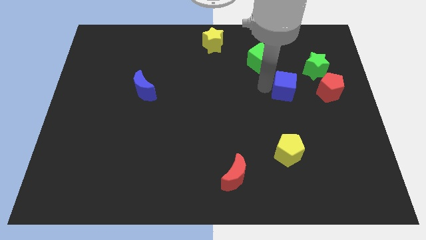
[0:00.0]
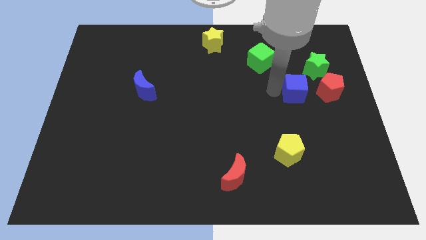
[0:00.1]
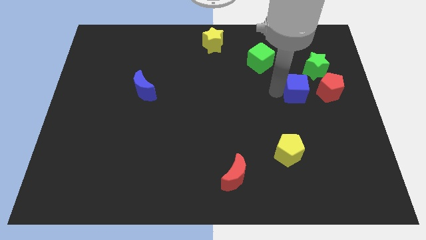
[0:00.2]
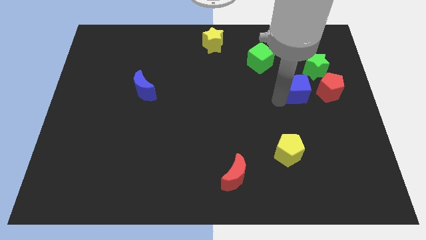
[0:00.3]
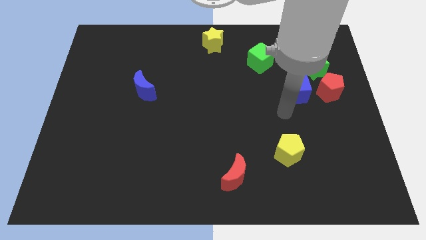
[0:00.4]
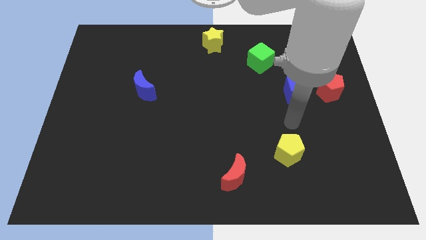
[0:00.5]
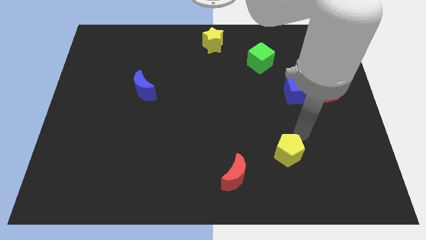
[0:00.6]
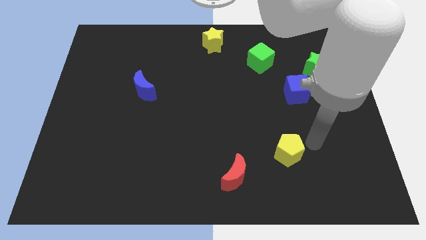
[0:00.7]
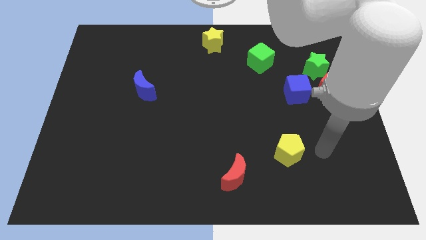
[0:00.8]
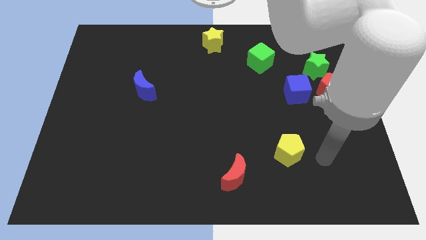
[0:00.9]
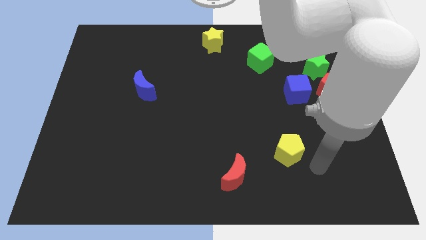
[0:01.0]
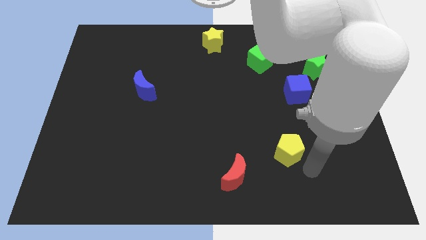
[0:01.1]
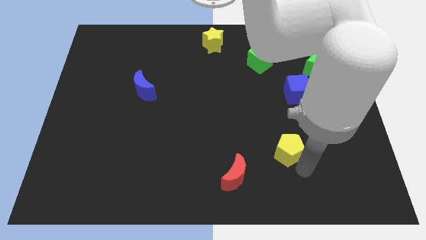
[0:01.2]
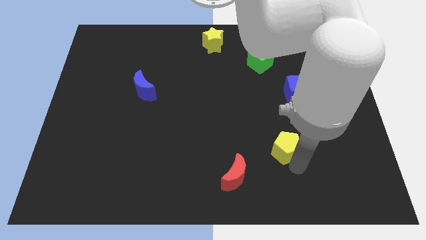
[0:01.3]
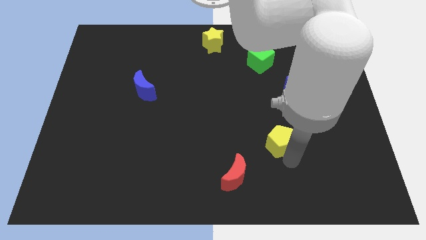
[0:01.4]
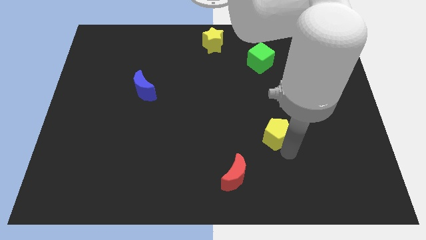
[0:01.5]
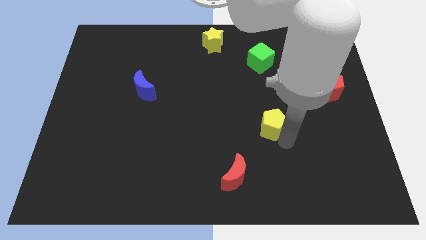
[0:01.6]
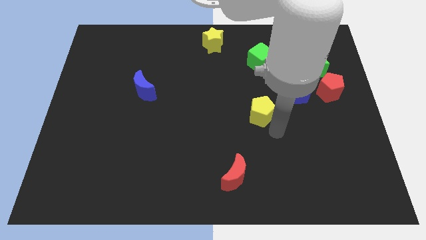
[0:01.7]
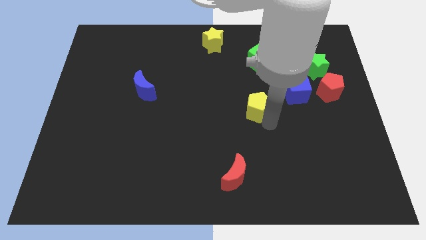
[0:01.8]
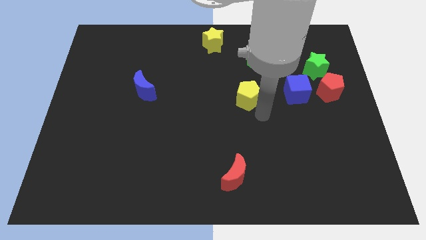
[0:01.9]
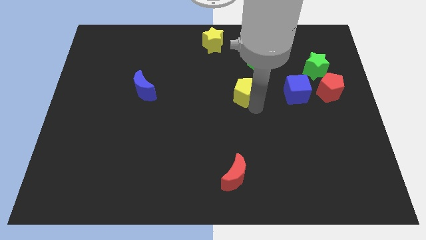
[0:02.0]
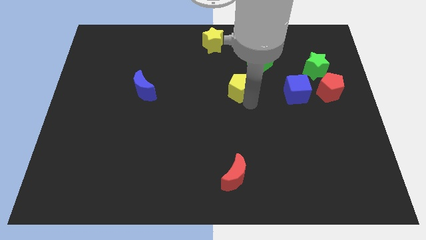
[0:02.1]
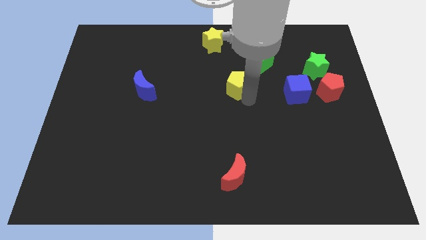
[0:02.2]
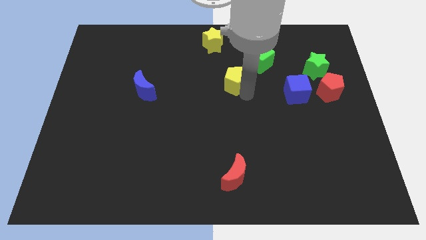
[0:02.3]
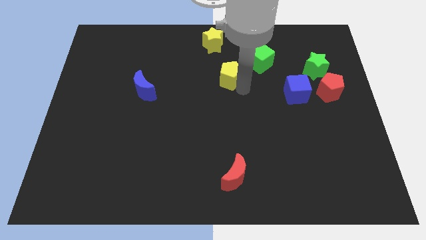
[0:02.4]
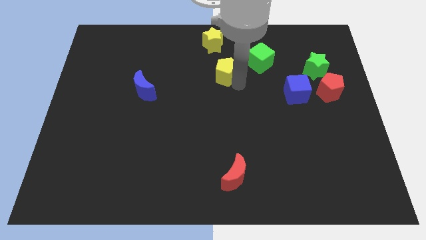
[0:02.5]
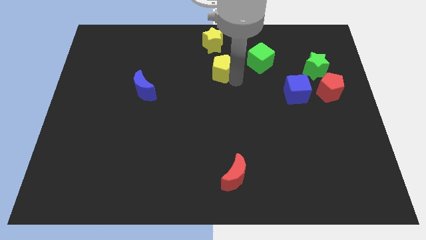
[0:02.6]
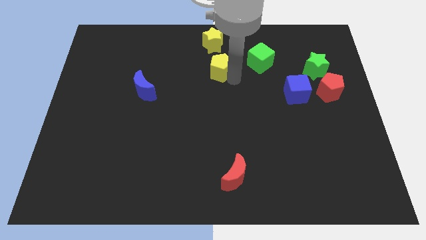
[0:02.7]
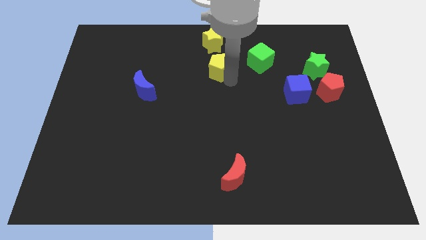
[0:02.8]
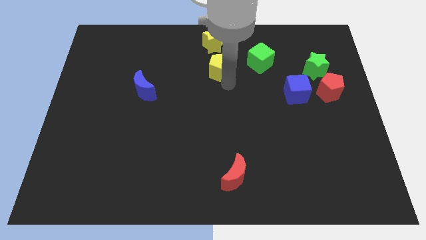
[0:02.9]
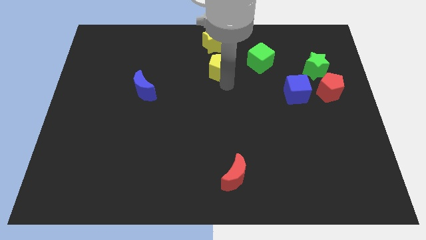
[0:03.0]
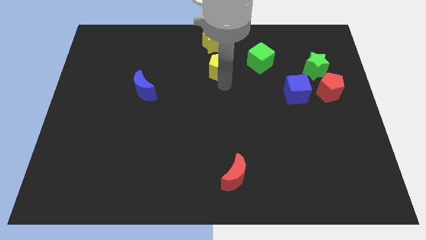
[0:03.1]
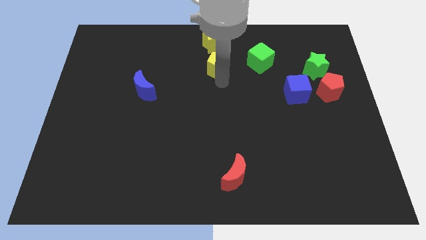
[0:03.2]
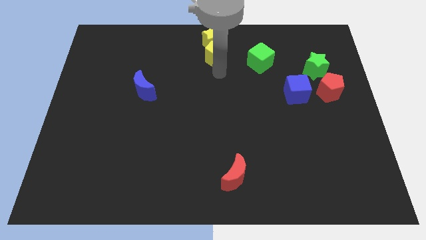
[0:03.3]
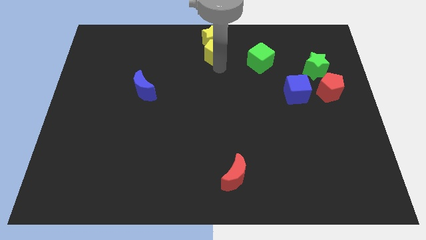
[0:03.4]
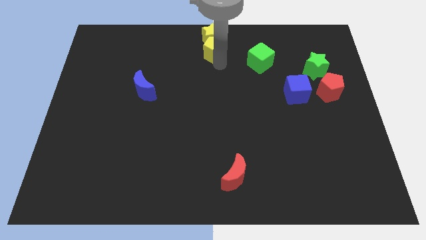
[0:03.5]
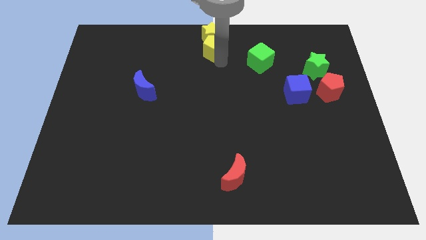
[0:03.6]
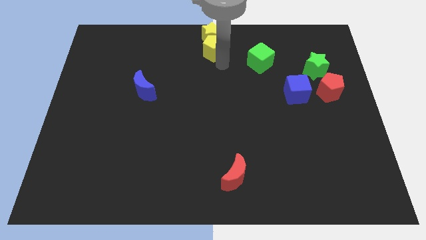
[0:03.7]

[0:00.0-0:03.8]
slide the yellow pentagon into the bottom side of the yellow star

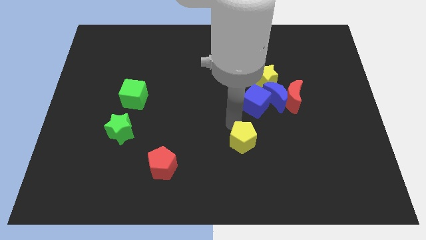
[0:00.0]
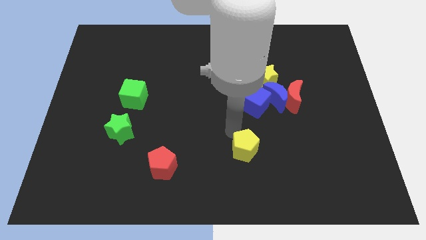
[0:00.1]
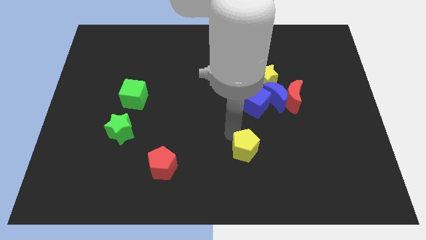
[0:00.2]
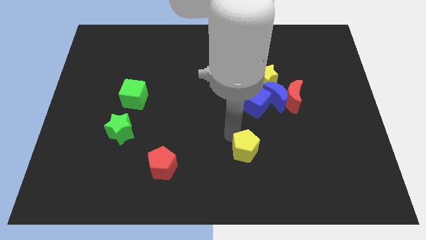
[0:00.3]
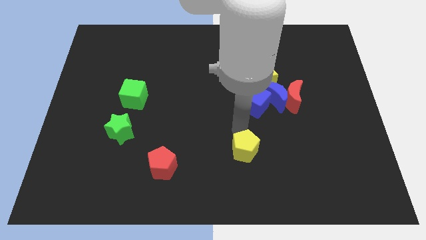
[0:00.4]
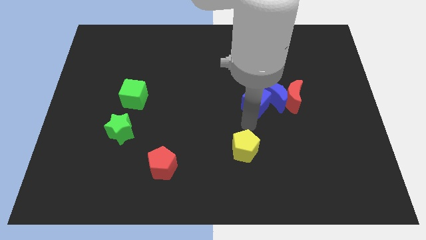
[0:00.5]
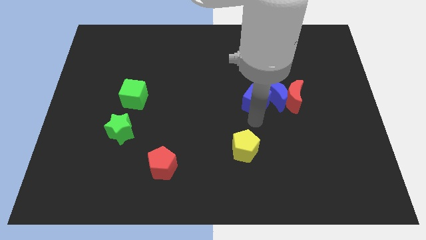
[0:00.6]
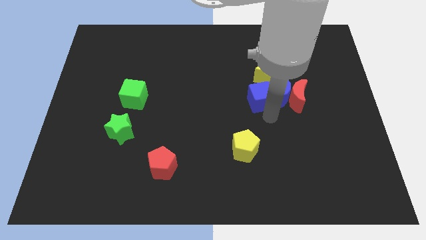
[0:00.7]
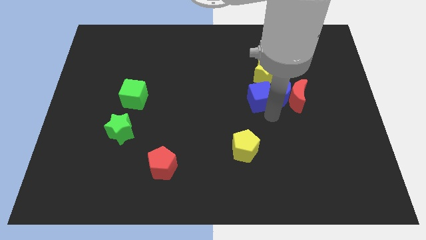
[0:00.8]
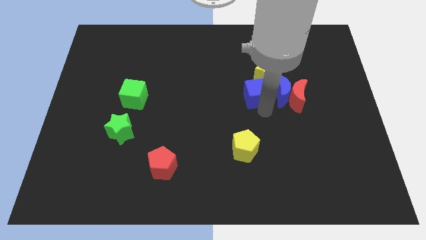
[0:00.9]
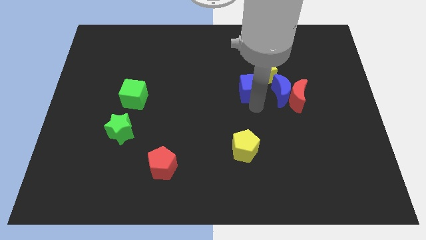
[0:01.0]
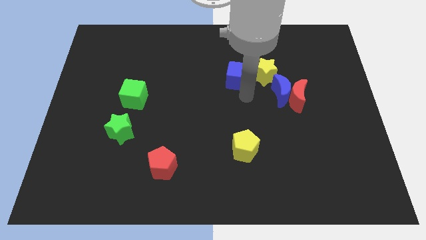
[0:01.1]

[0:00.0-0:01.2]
slightly touch the group of blocks

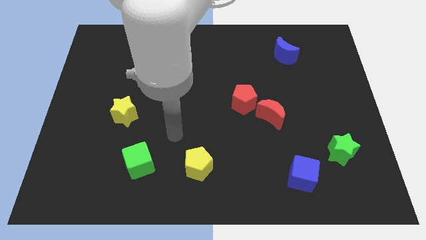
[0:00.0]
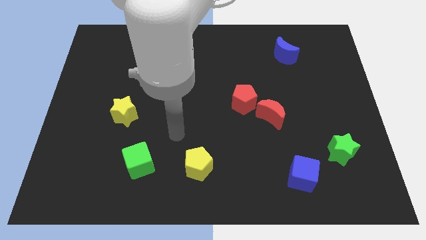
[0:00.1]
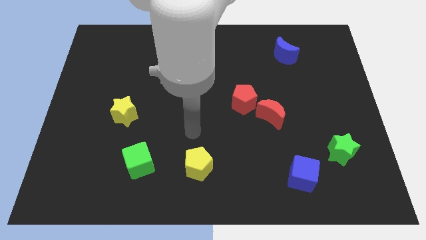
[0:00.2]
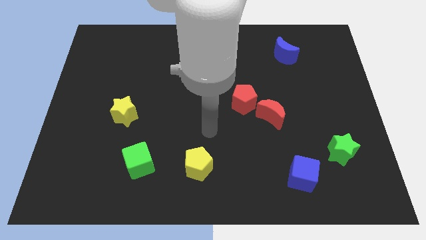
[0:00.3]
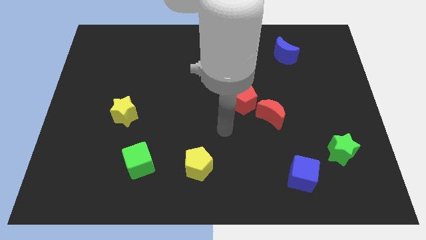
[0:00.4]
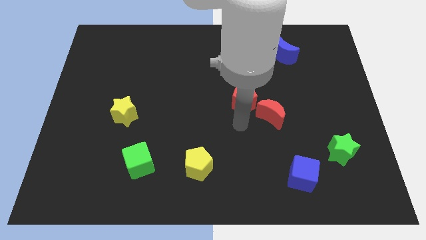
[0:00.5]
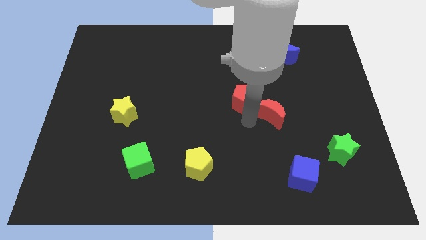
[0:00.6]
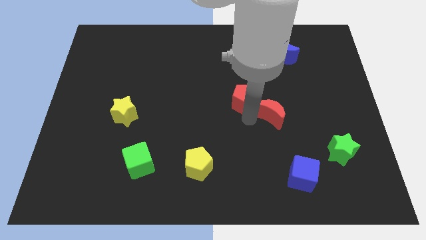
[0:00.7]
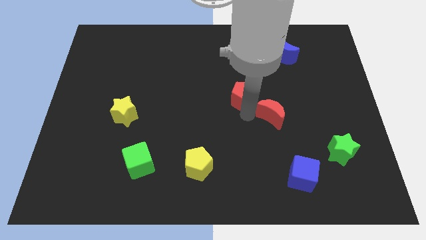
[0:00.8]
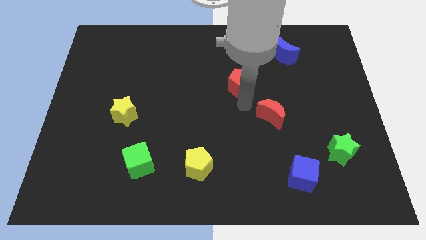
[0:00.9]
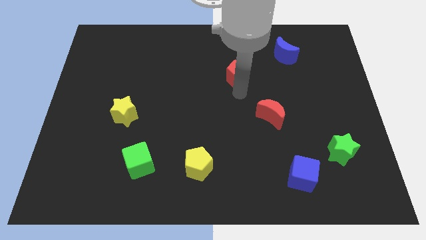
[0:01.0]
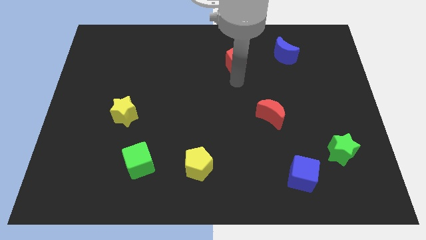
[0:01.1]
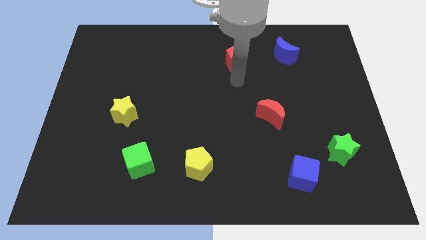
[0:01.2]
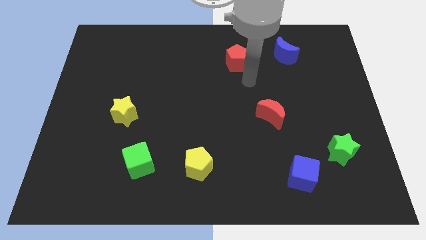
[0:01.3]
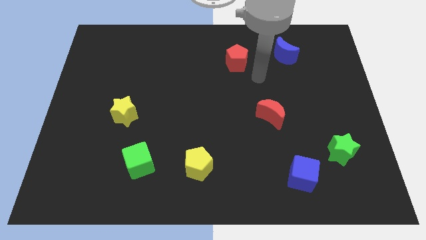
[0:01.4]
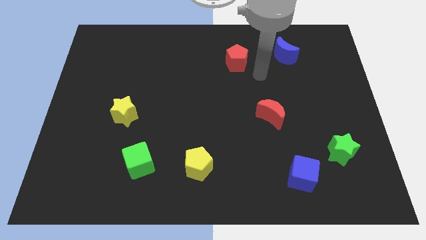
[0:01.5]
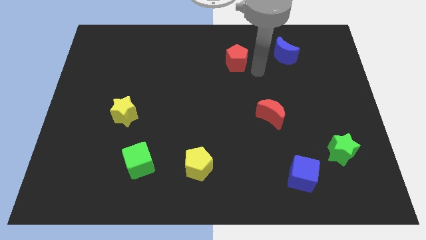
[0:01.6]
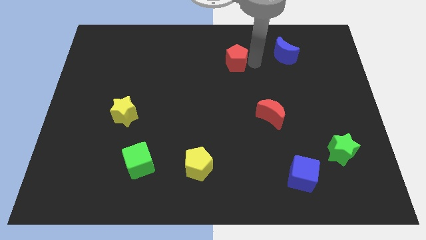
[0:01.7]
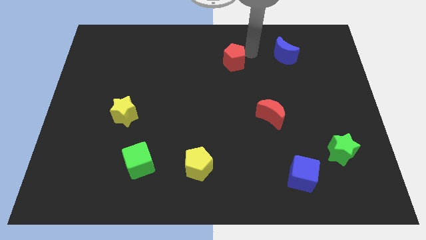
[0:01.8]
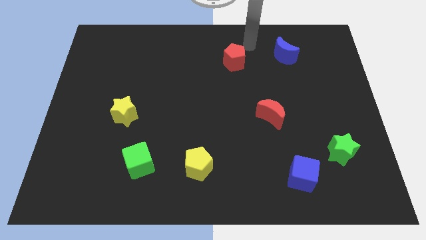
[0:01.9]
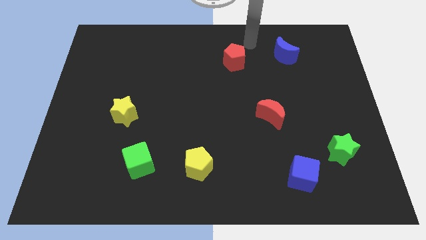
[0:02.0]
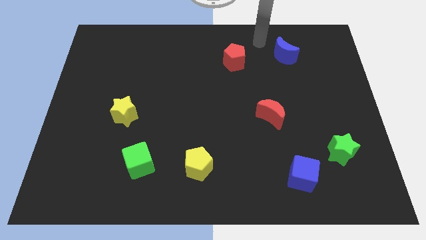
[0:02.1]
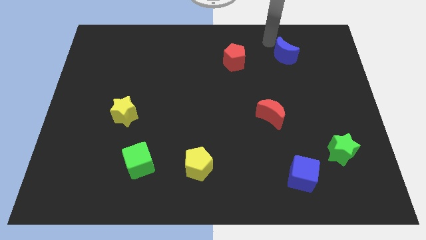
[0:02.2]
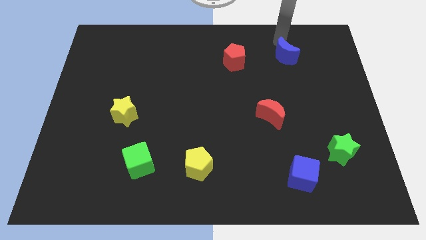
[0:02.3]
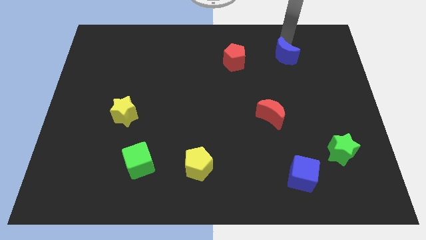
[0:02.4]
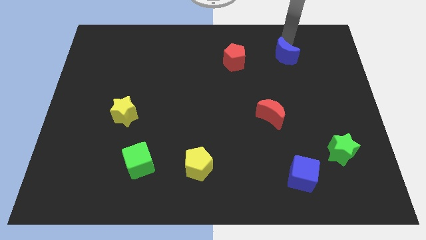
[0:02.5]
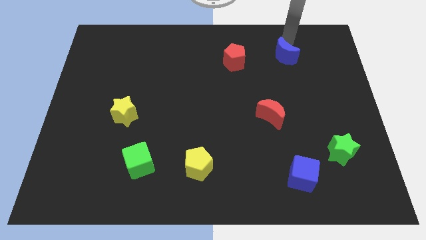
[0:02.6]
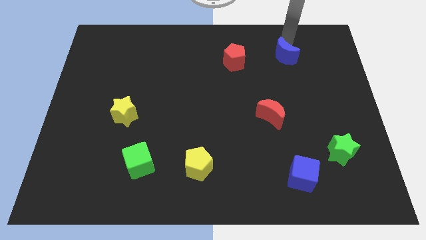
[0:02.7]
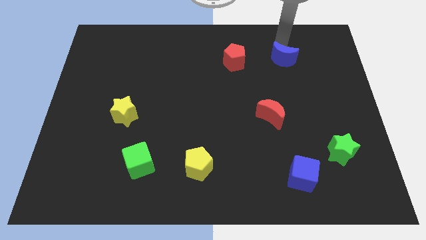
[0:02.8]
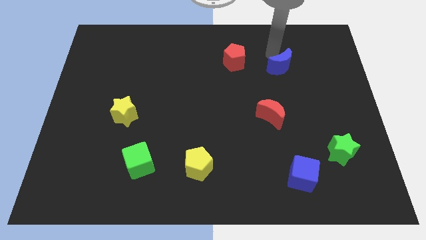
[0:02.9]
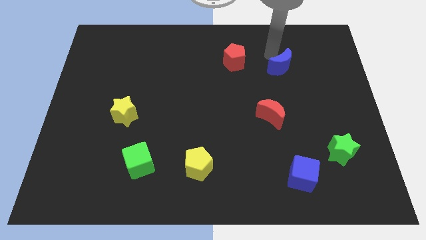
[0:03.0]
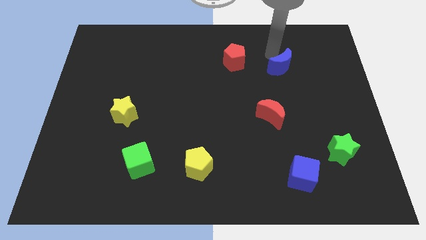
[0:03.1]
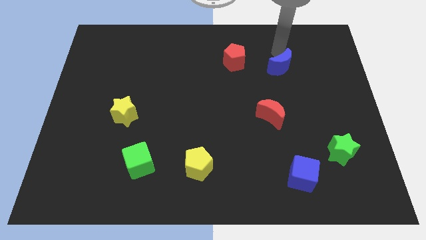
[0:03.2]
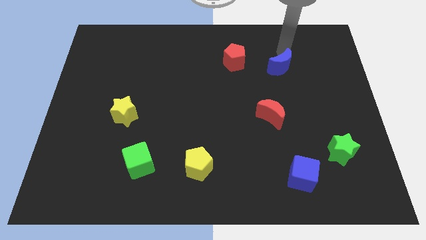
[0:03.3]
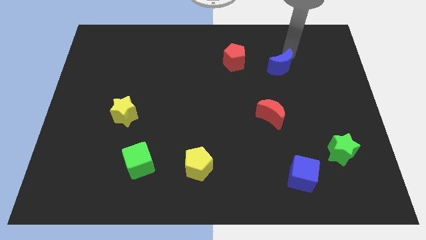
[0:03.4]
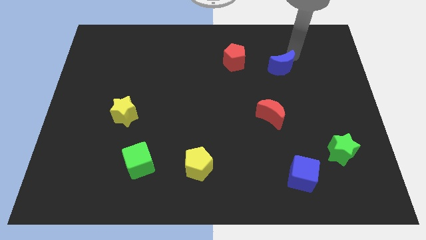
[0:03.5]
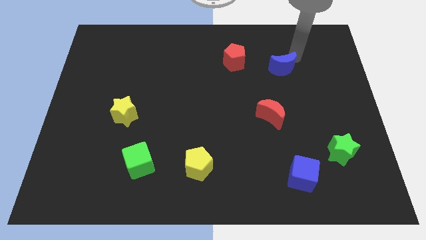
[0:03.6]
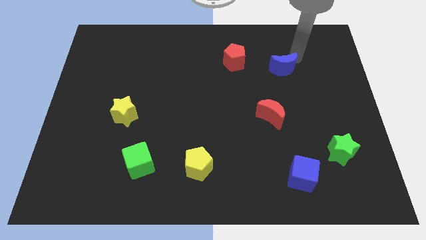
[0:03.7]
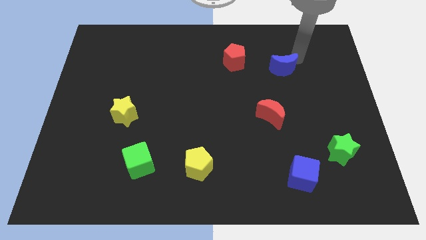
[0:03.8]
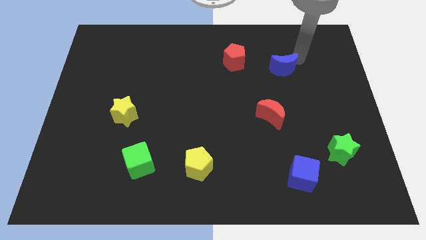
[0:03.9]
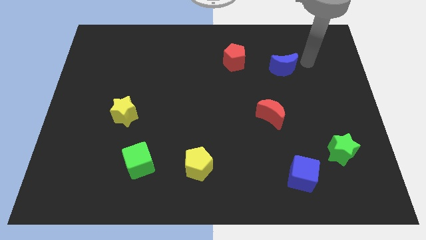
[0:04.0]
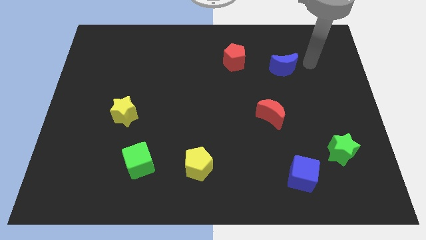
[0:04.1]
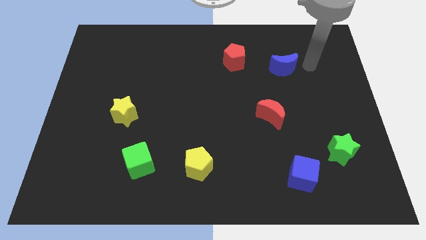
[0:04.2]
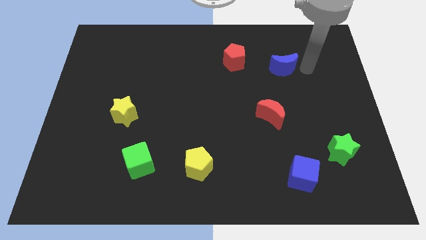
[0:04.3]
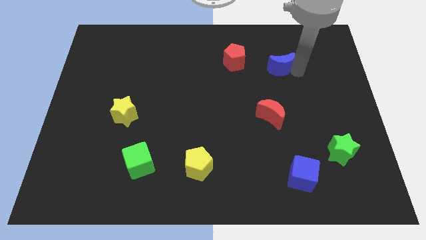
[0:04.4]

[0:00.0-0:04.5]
move the red pentagon away from the red crescent
